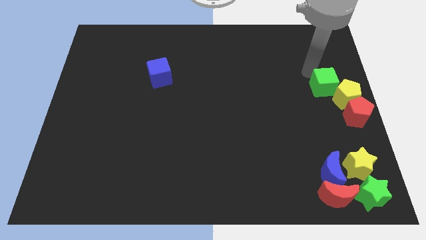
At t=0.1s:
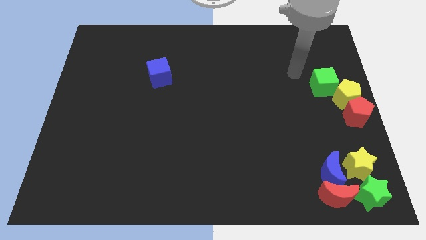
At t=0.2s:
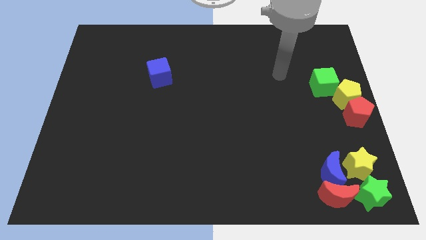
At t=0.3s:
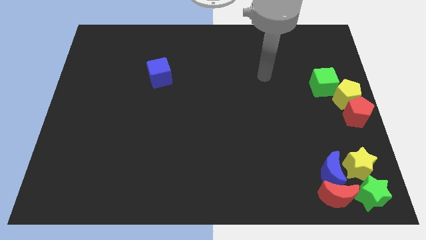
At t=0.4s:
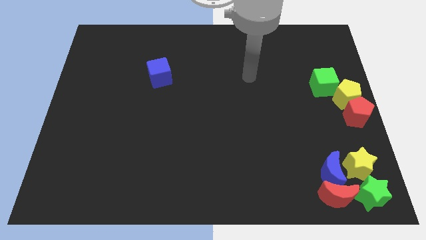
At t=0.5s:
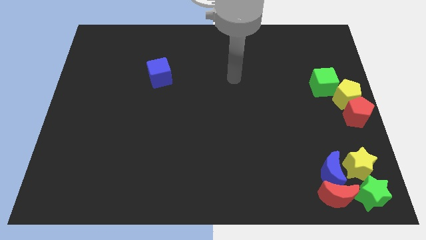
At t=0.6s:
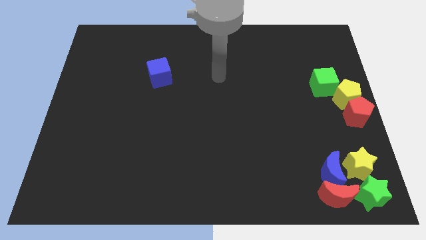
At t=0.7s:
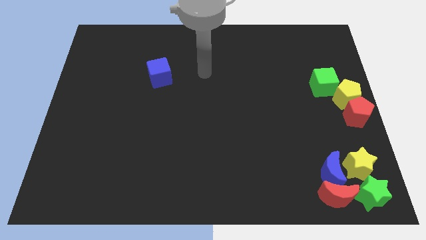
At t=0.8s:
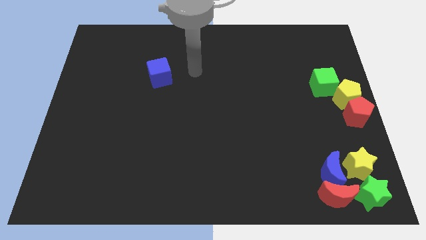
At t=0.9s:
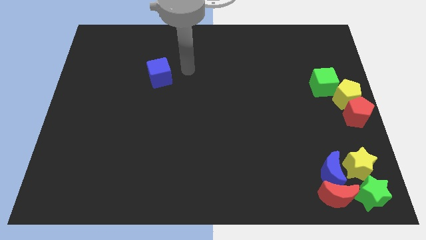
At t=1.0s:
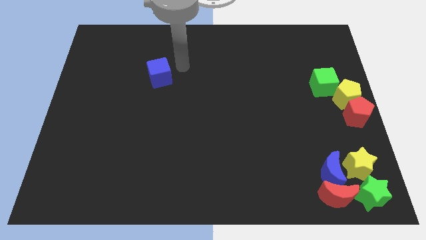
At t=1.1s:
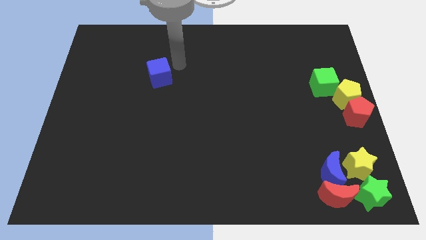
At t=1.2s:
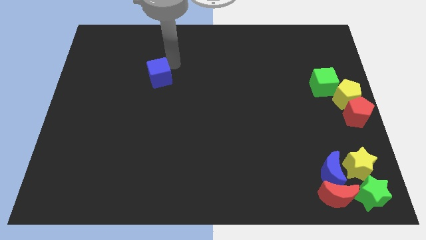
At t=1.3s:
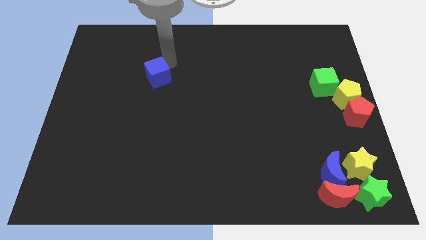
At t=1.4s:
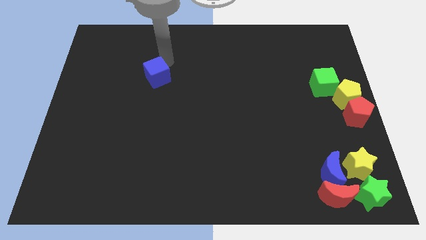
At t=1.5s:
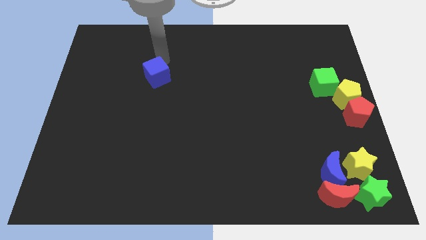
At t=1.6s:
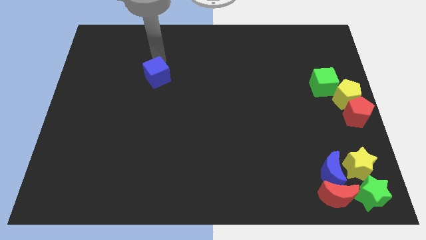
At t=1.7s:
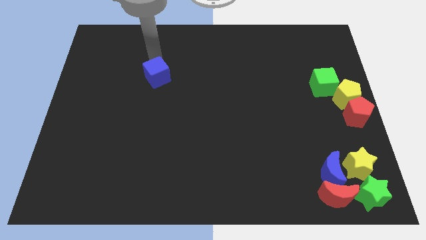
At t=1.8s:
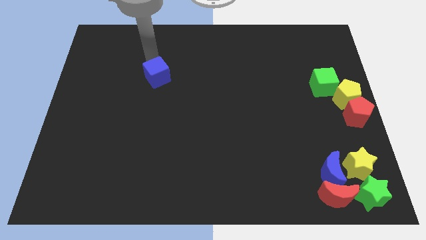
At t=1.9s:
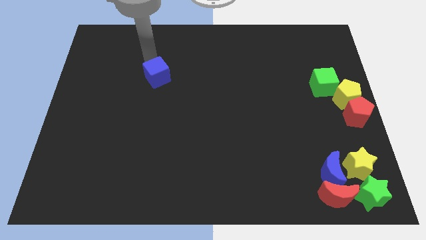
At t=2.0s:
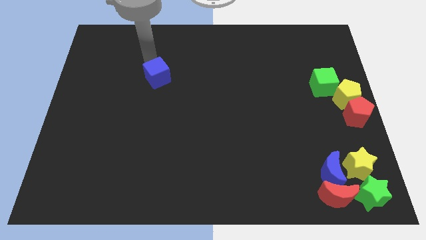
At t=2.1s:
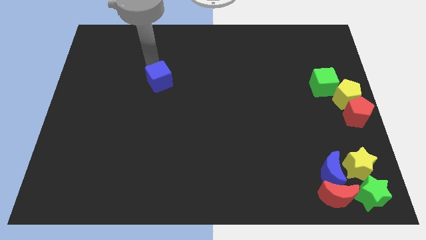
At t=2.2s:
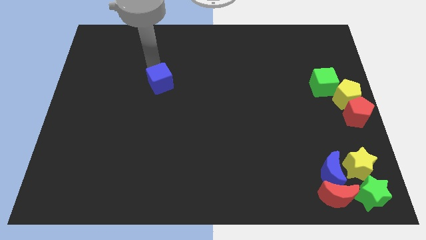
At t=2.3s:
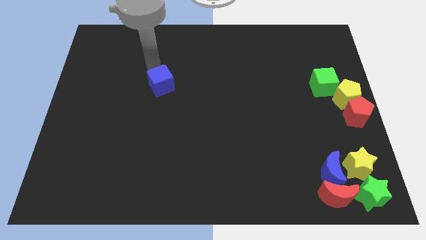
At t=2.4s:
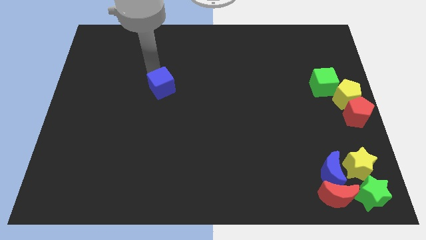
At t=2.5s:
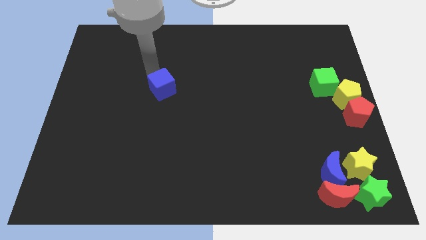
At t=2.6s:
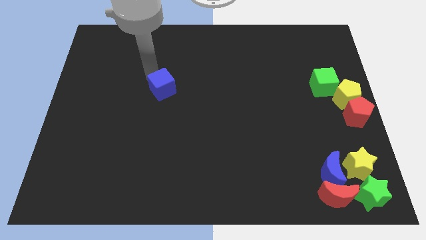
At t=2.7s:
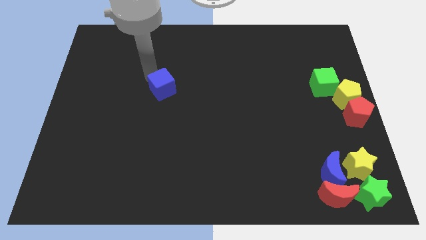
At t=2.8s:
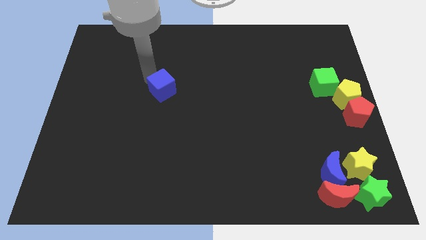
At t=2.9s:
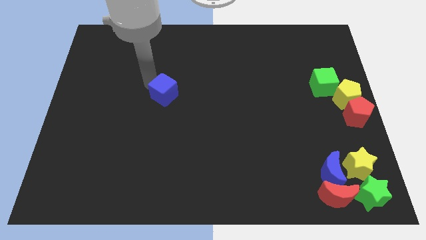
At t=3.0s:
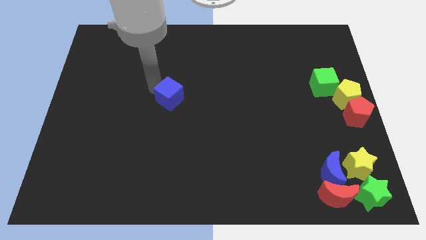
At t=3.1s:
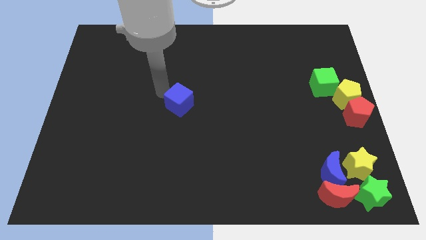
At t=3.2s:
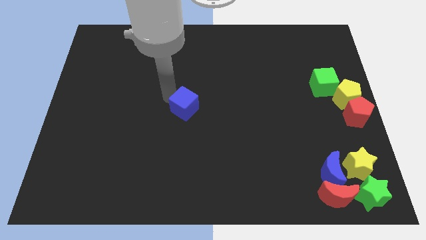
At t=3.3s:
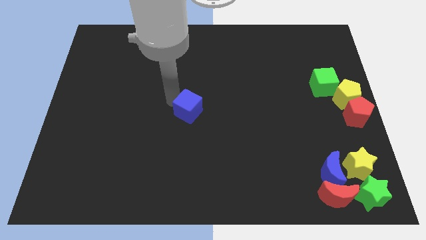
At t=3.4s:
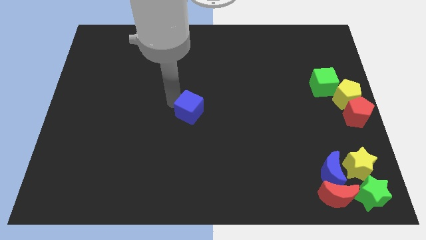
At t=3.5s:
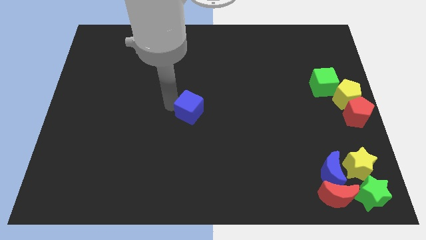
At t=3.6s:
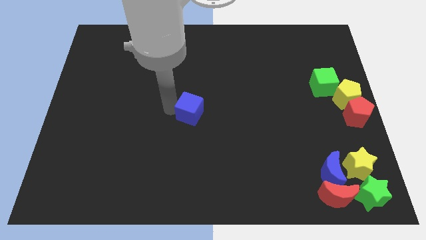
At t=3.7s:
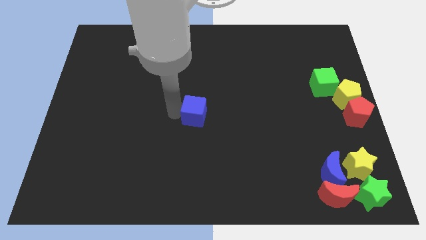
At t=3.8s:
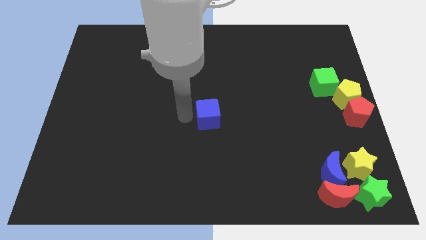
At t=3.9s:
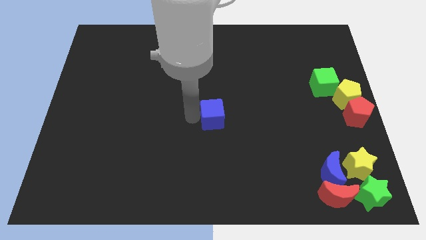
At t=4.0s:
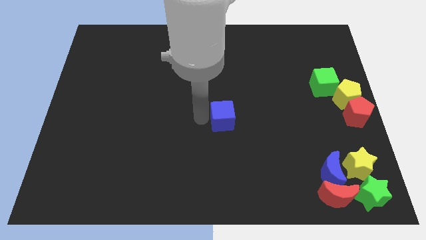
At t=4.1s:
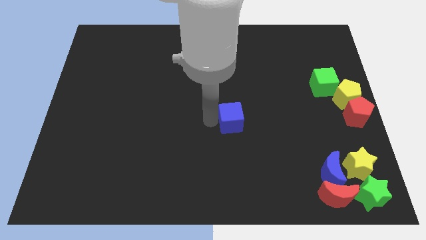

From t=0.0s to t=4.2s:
move the blue cube to the center of the board

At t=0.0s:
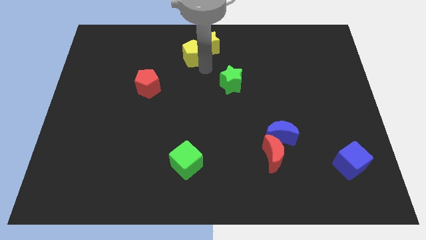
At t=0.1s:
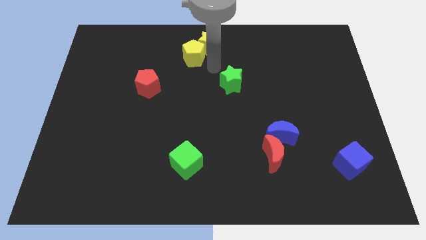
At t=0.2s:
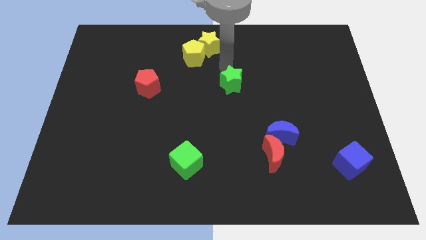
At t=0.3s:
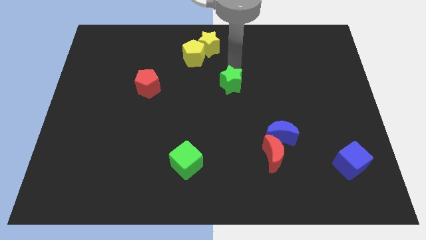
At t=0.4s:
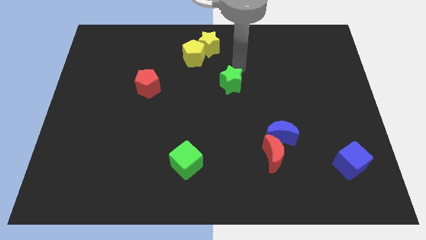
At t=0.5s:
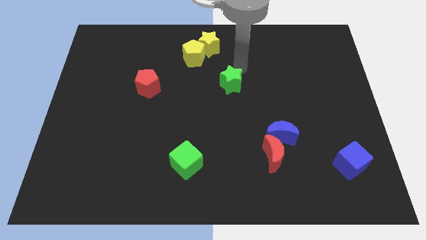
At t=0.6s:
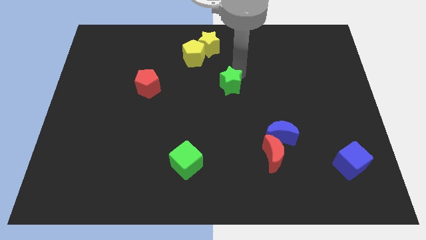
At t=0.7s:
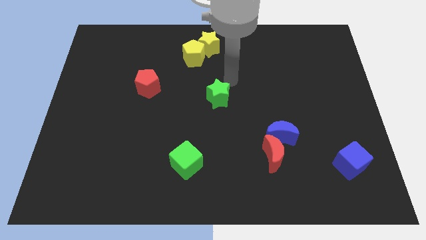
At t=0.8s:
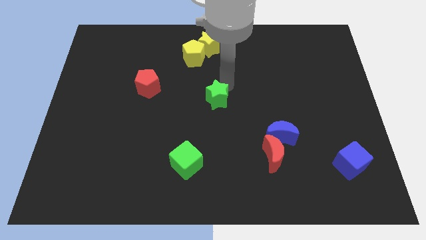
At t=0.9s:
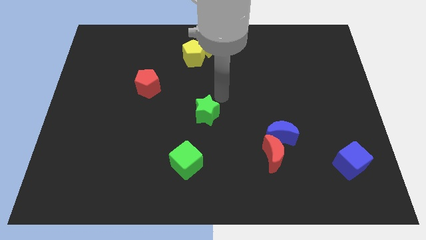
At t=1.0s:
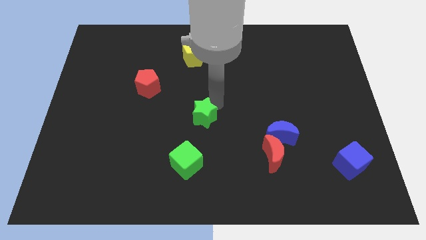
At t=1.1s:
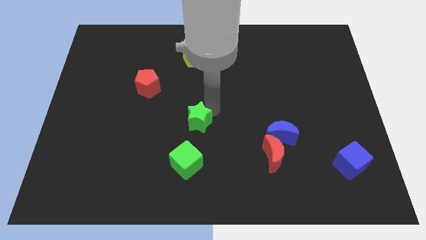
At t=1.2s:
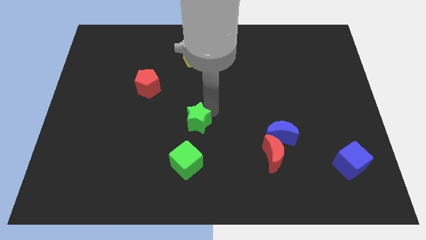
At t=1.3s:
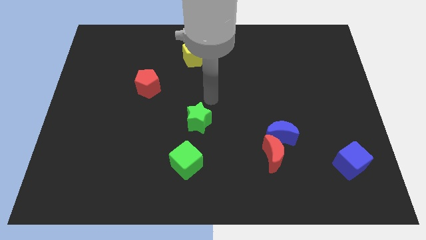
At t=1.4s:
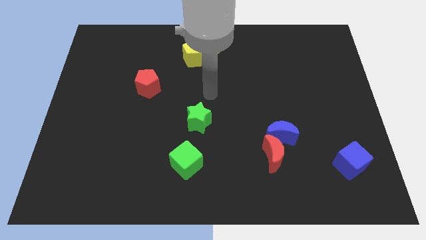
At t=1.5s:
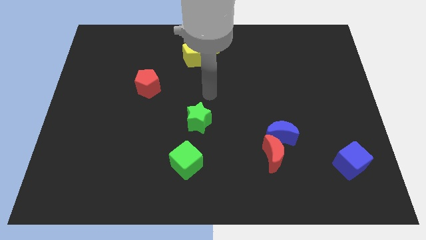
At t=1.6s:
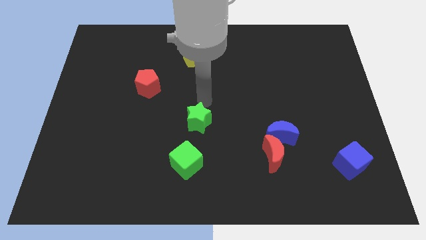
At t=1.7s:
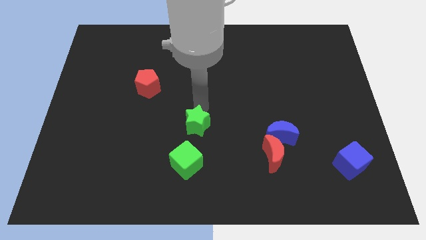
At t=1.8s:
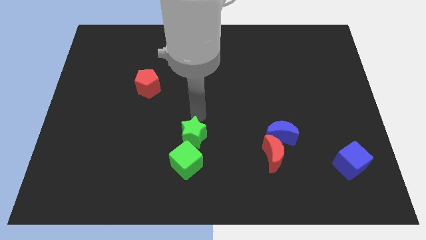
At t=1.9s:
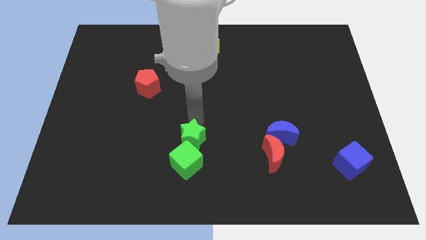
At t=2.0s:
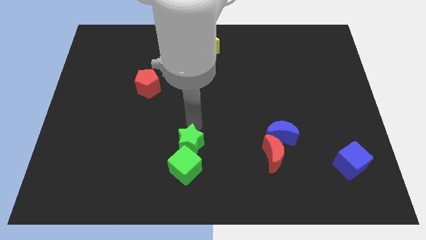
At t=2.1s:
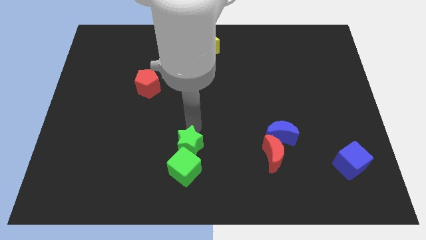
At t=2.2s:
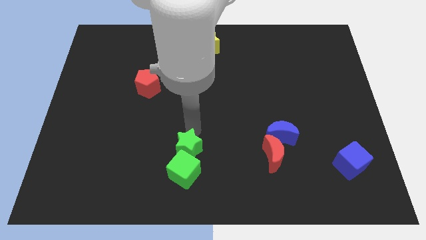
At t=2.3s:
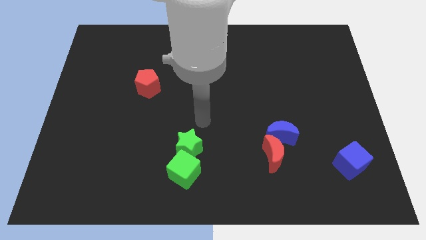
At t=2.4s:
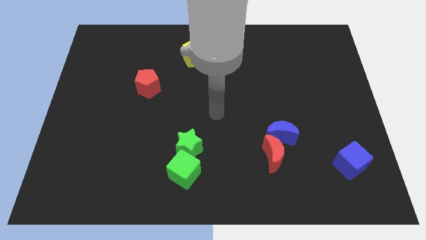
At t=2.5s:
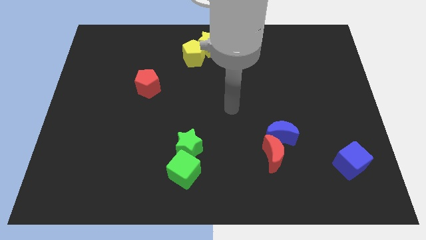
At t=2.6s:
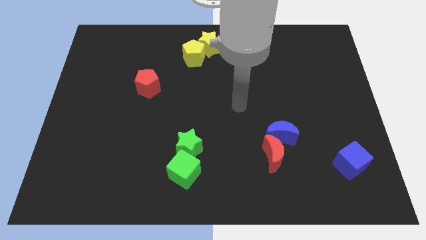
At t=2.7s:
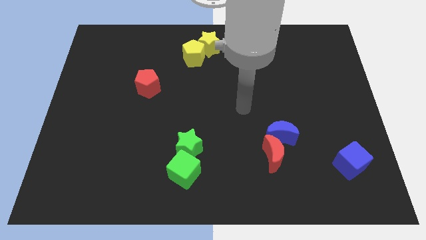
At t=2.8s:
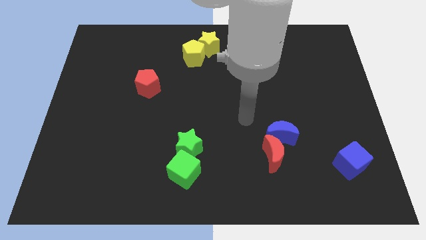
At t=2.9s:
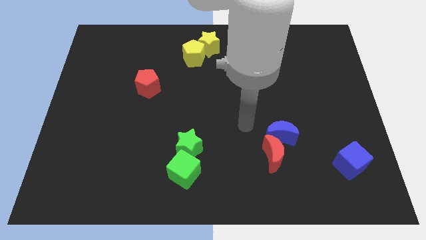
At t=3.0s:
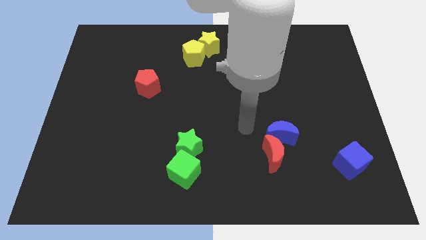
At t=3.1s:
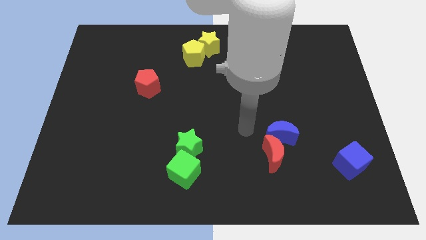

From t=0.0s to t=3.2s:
move green star into green cube

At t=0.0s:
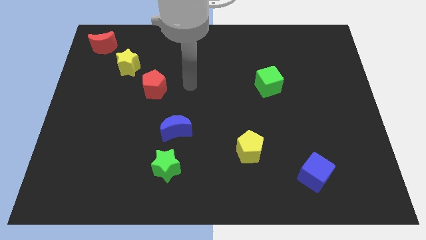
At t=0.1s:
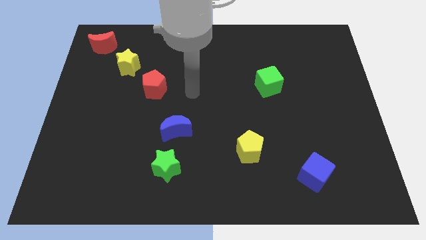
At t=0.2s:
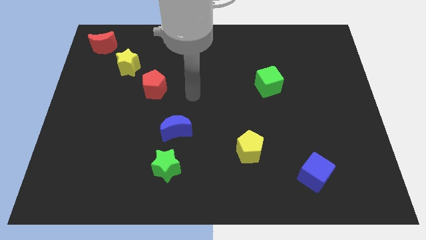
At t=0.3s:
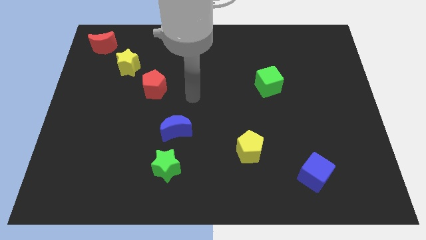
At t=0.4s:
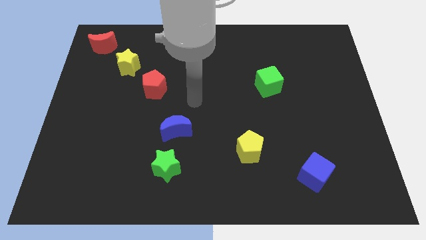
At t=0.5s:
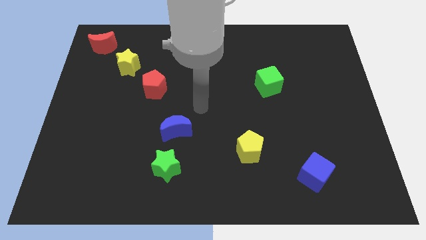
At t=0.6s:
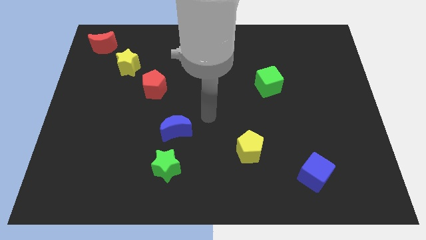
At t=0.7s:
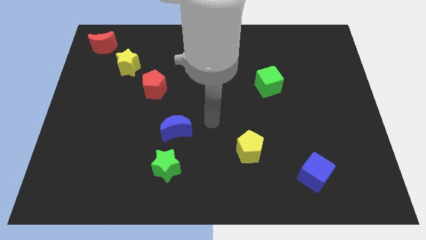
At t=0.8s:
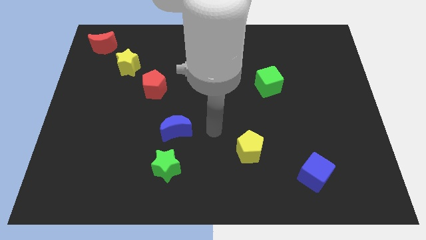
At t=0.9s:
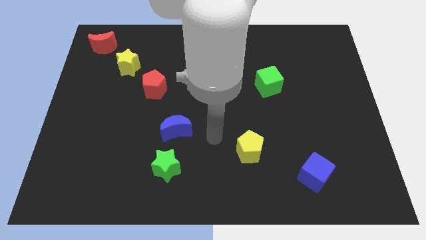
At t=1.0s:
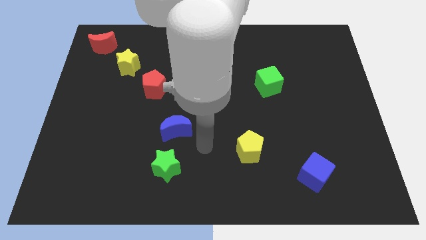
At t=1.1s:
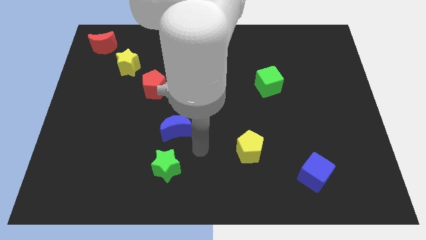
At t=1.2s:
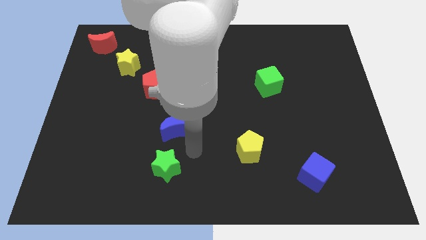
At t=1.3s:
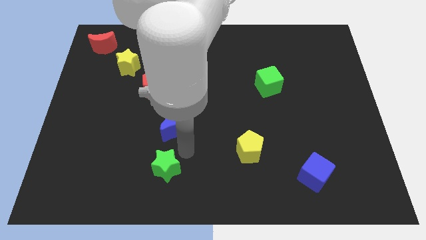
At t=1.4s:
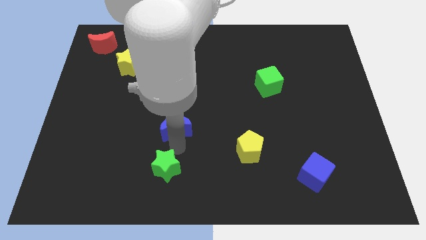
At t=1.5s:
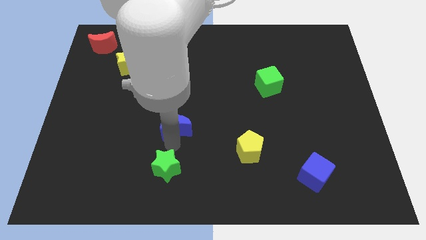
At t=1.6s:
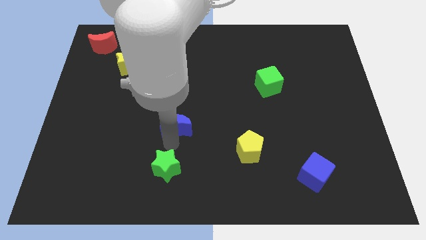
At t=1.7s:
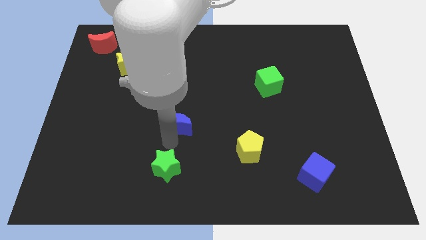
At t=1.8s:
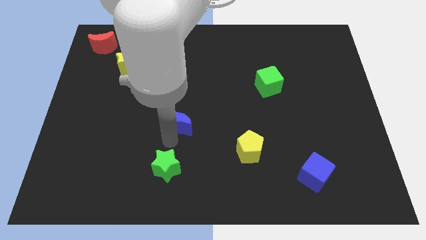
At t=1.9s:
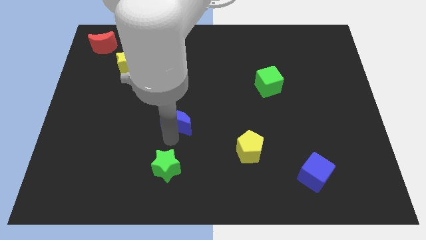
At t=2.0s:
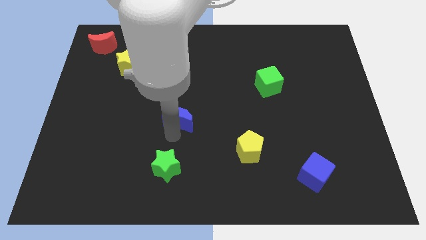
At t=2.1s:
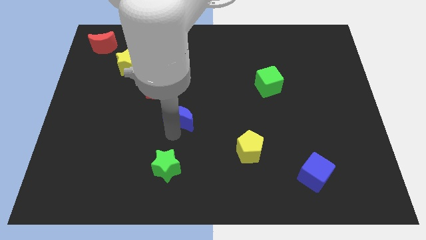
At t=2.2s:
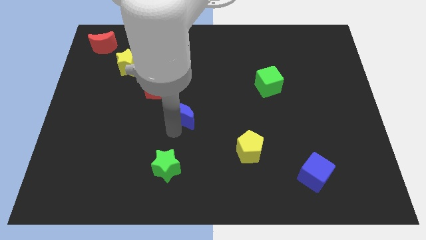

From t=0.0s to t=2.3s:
move blue crescent slightly up
